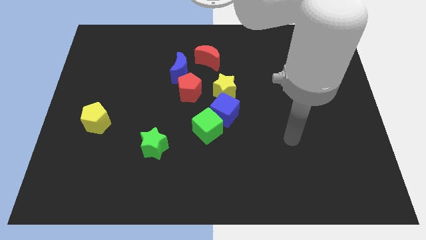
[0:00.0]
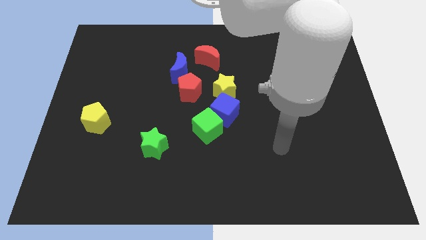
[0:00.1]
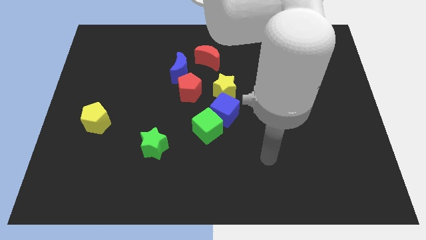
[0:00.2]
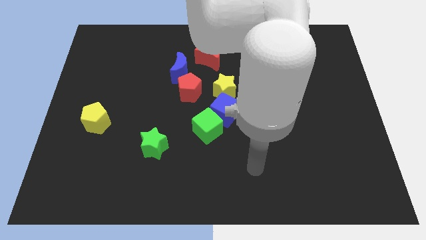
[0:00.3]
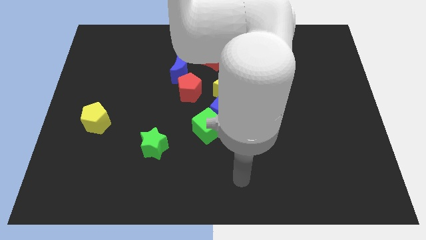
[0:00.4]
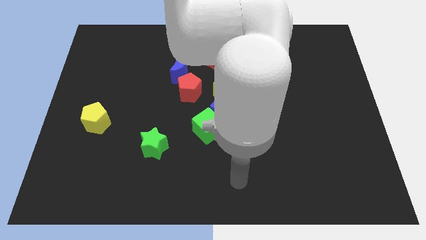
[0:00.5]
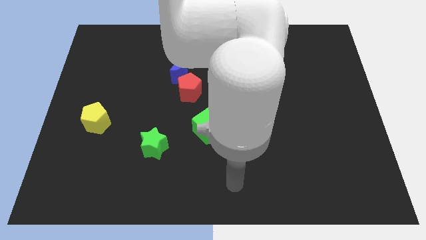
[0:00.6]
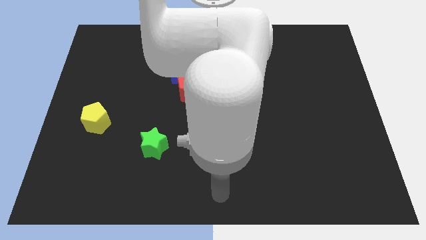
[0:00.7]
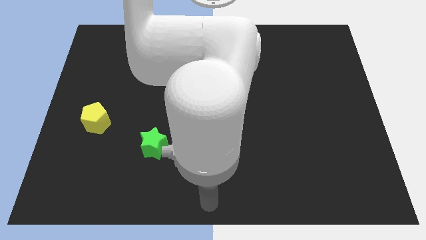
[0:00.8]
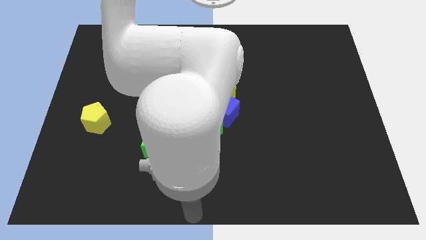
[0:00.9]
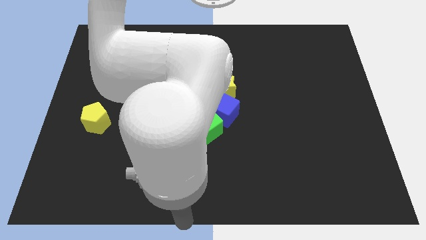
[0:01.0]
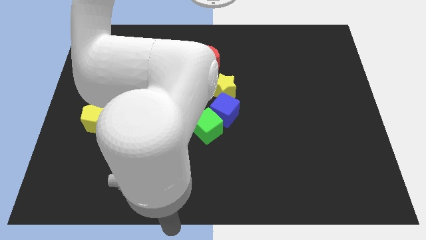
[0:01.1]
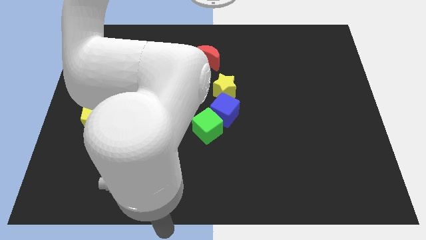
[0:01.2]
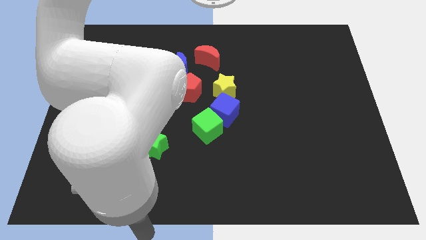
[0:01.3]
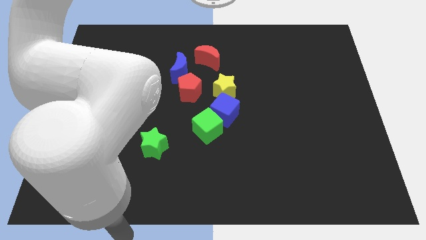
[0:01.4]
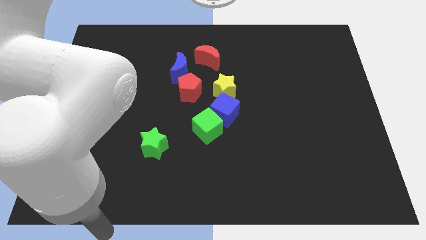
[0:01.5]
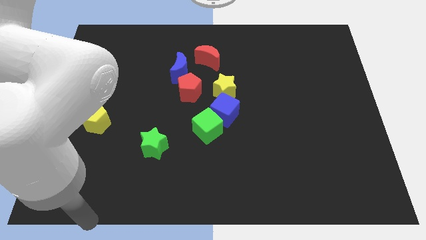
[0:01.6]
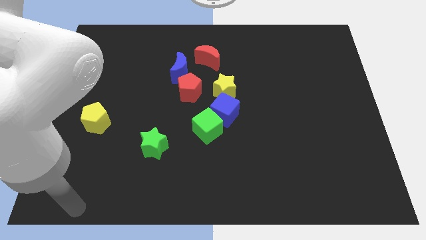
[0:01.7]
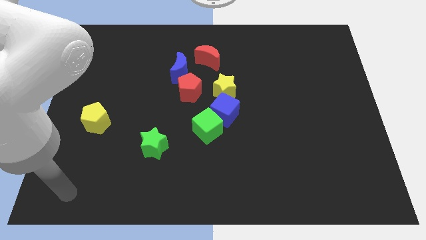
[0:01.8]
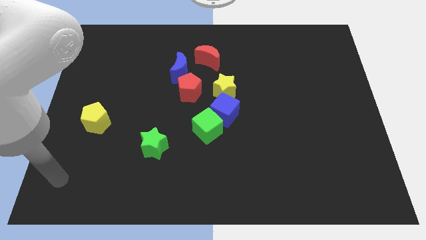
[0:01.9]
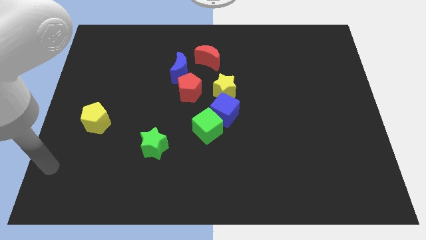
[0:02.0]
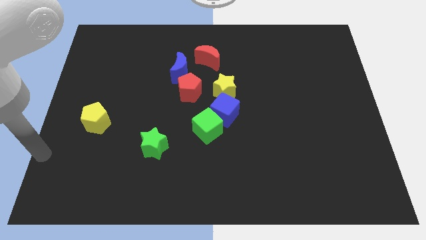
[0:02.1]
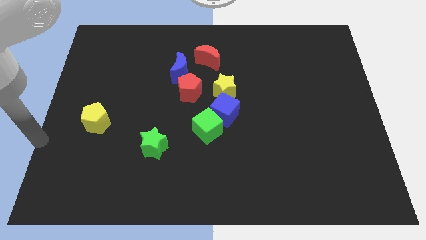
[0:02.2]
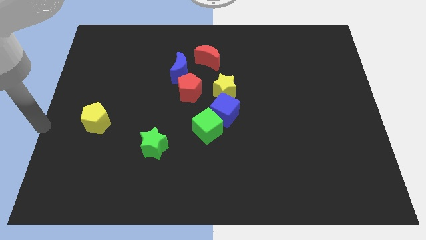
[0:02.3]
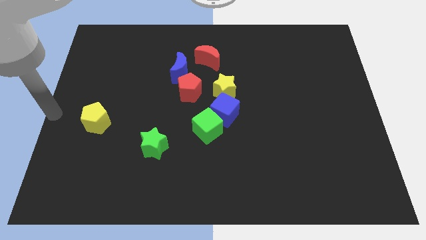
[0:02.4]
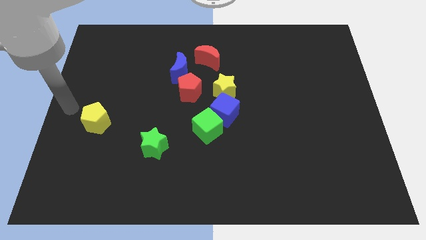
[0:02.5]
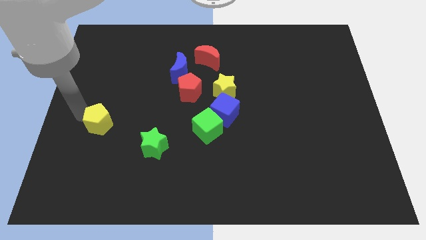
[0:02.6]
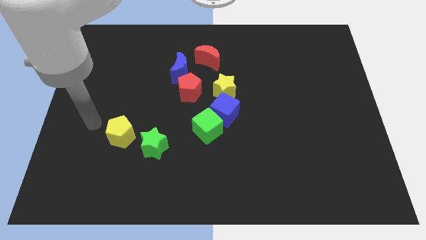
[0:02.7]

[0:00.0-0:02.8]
touch at the left side of the yellow pentagon

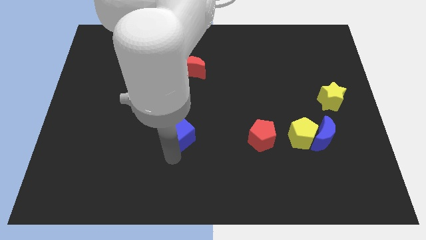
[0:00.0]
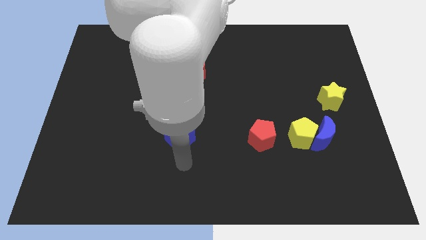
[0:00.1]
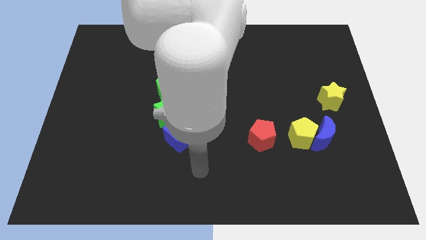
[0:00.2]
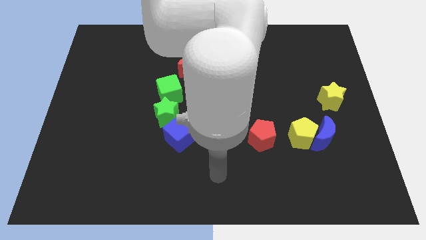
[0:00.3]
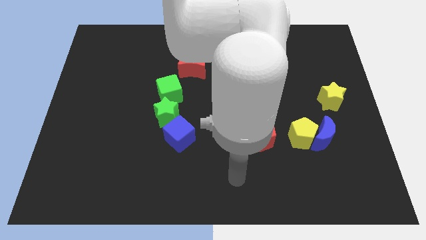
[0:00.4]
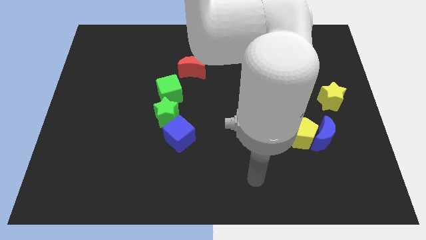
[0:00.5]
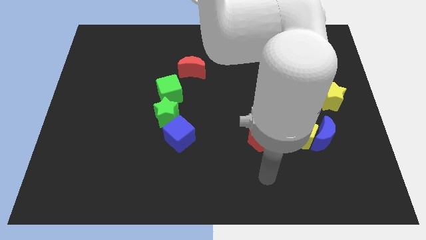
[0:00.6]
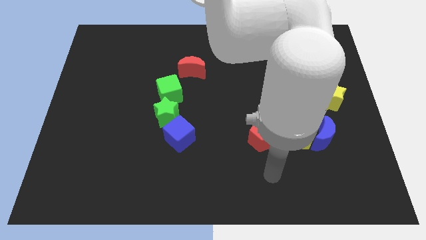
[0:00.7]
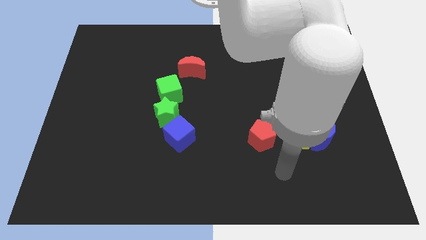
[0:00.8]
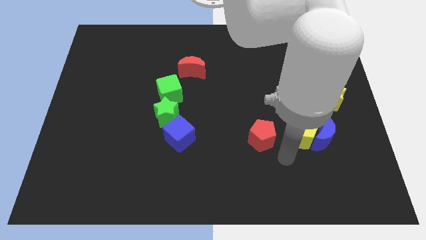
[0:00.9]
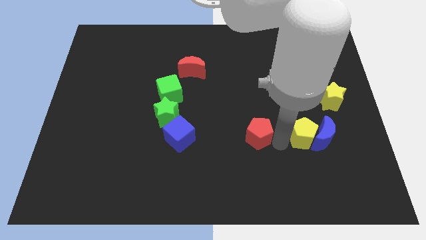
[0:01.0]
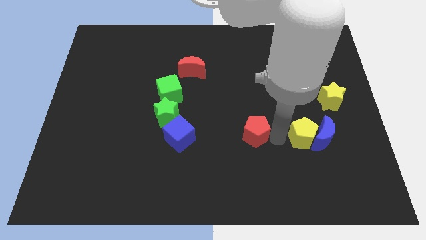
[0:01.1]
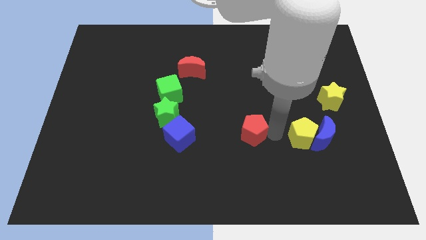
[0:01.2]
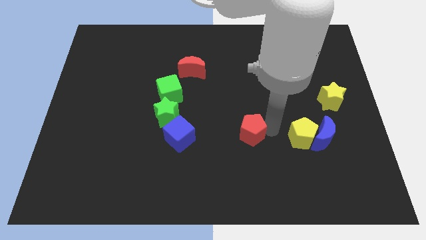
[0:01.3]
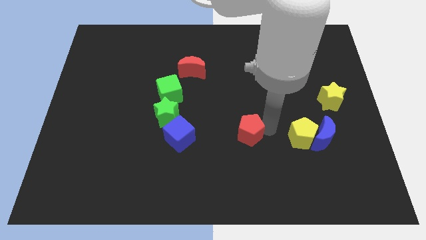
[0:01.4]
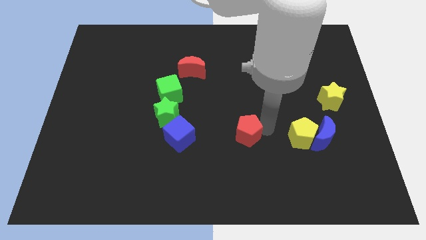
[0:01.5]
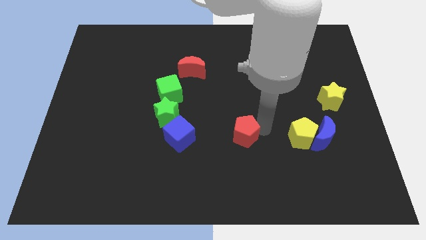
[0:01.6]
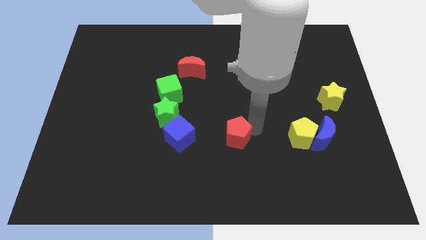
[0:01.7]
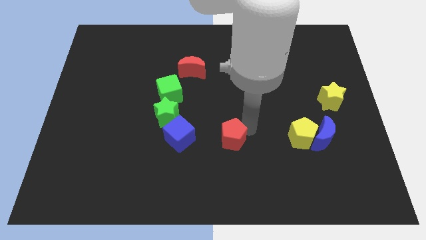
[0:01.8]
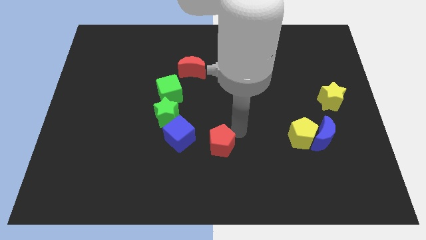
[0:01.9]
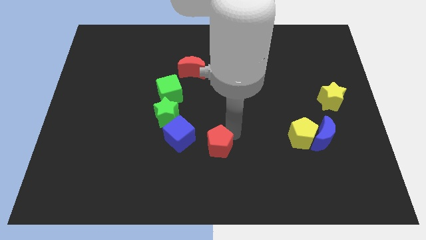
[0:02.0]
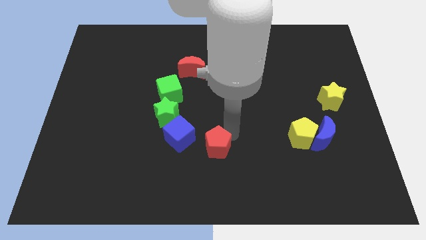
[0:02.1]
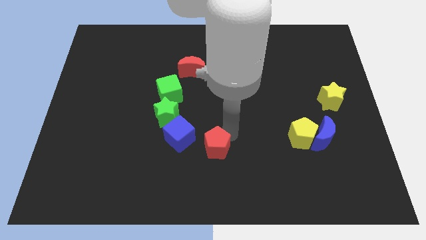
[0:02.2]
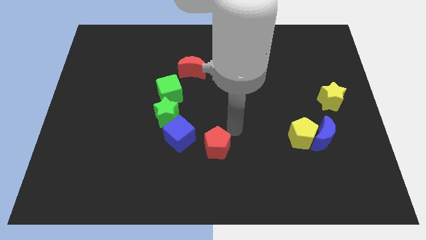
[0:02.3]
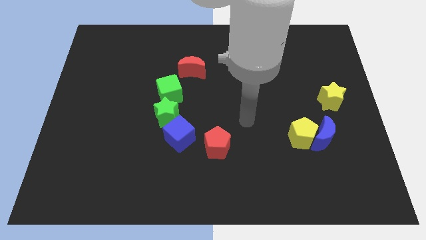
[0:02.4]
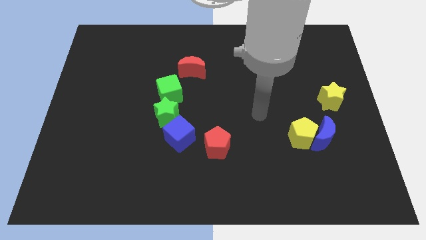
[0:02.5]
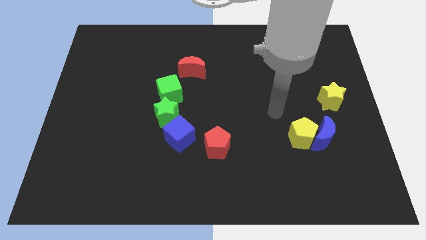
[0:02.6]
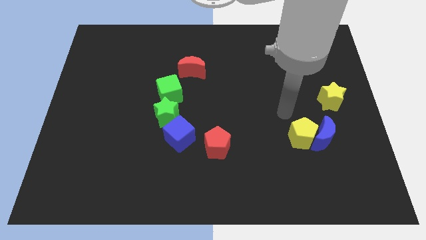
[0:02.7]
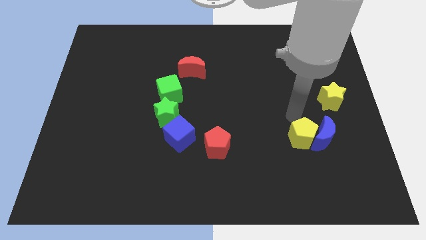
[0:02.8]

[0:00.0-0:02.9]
move red pentagon towards blue cube

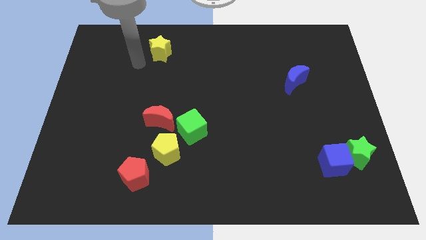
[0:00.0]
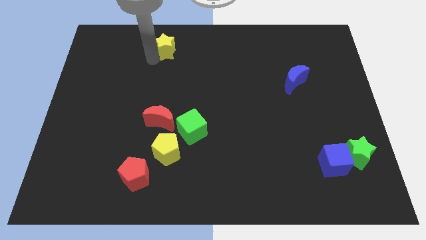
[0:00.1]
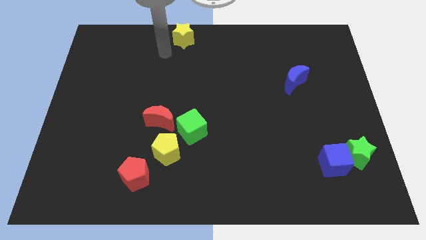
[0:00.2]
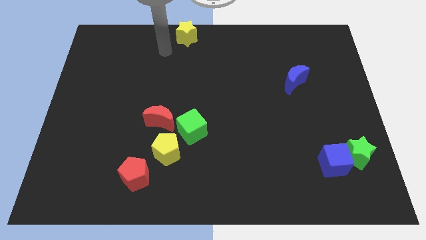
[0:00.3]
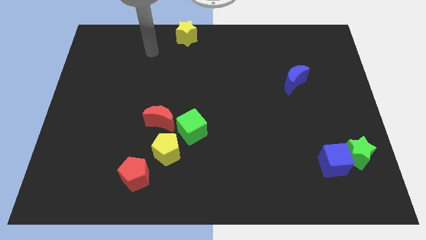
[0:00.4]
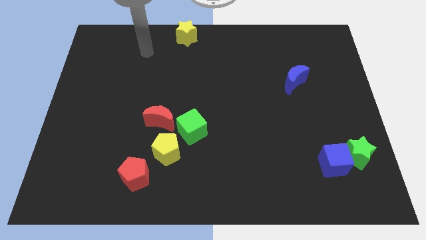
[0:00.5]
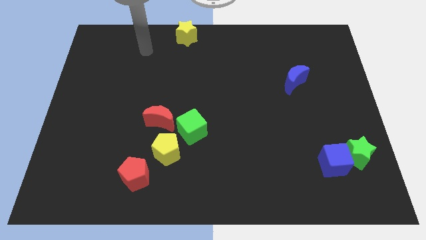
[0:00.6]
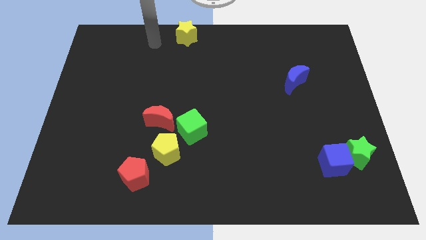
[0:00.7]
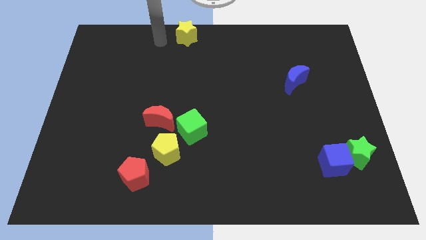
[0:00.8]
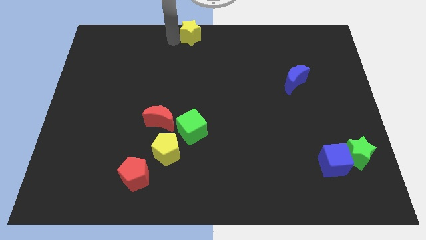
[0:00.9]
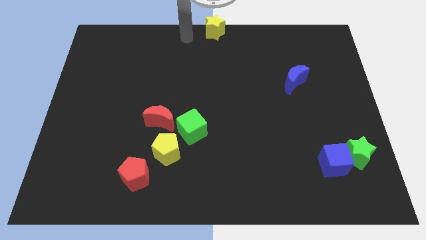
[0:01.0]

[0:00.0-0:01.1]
move yellow star to the top center

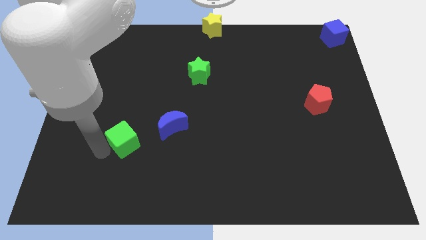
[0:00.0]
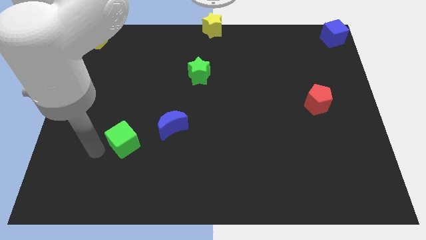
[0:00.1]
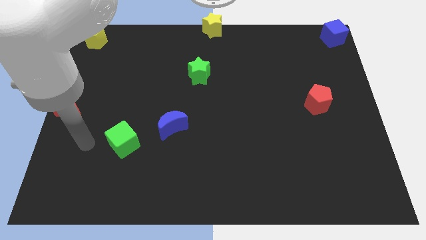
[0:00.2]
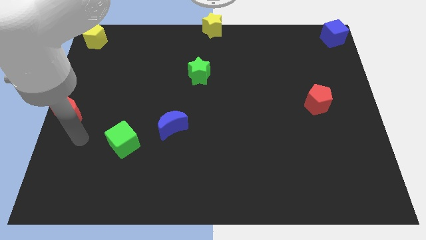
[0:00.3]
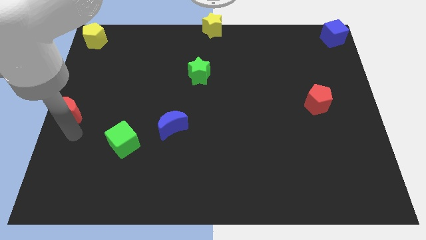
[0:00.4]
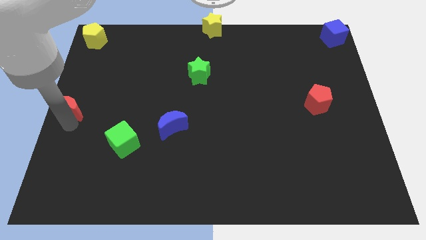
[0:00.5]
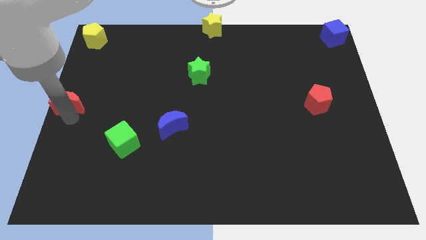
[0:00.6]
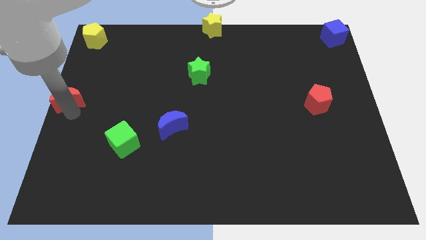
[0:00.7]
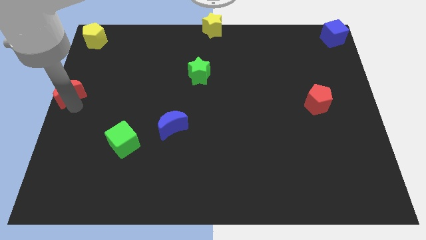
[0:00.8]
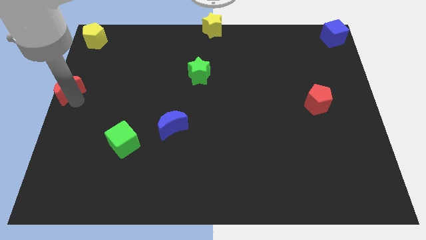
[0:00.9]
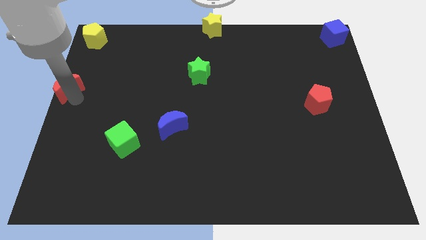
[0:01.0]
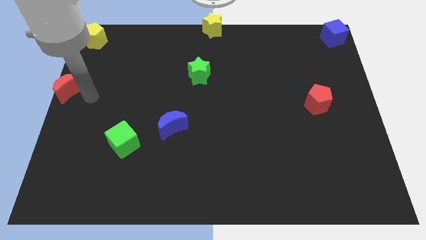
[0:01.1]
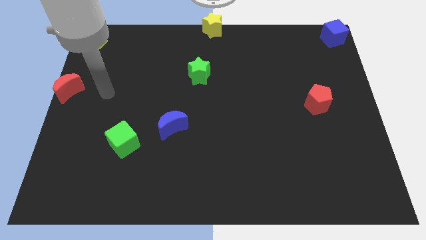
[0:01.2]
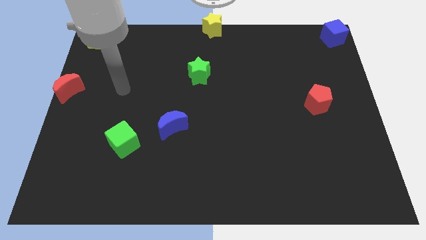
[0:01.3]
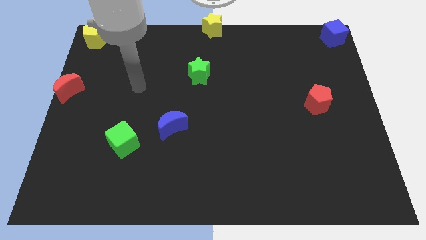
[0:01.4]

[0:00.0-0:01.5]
move the red crescent to the bottom of the yellow pentagon

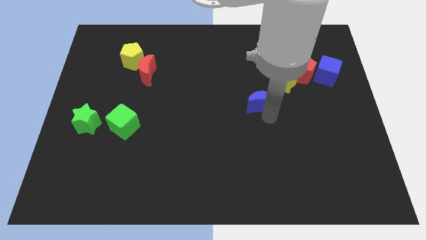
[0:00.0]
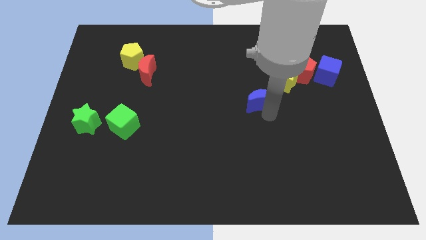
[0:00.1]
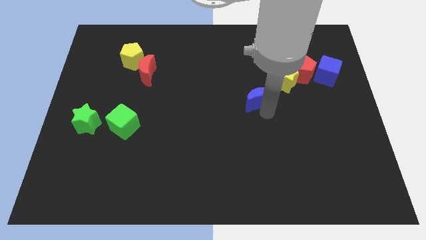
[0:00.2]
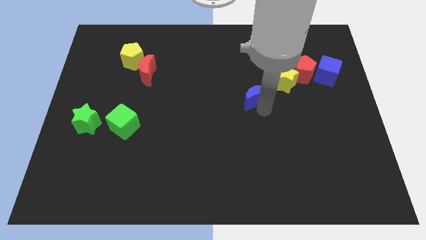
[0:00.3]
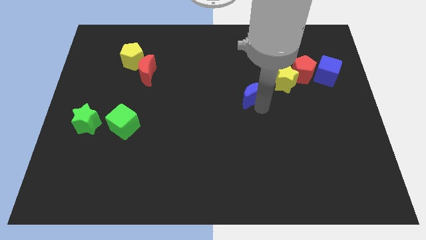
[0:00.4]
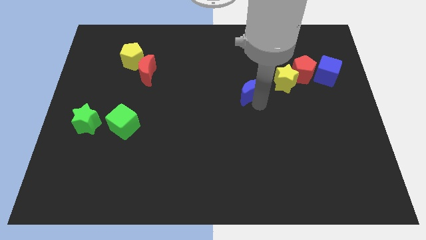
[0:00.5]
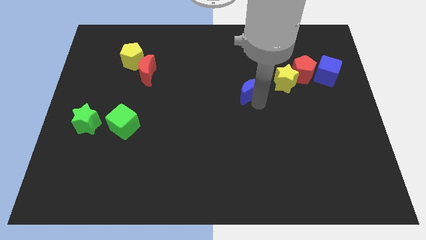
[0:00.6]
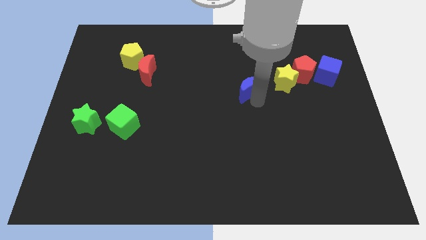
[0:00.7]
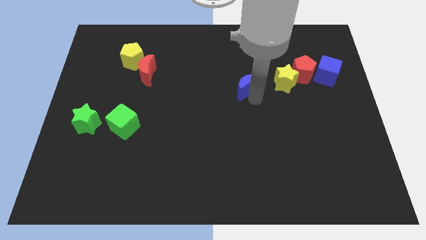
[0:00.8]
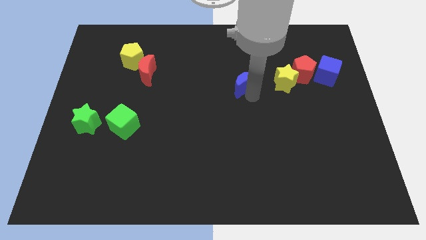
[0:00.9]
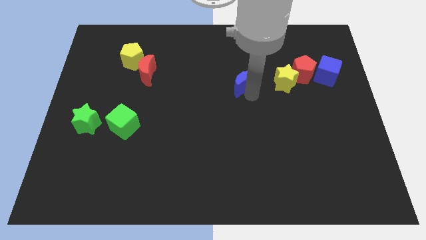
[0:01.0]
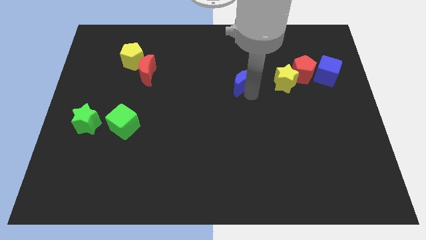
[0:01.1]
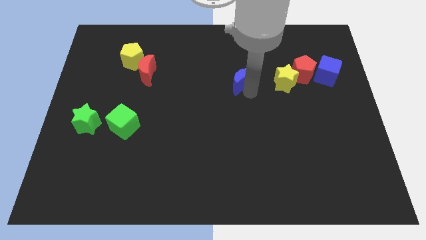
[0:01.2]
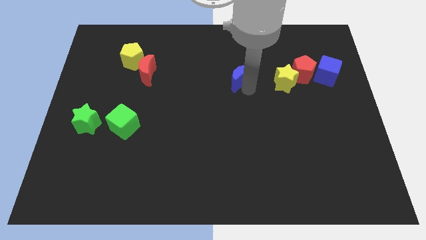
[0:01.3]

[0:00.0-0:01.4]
place the blue moon left to the yellow star
